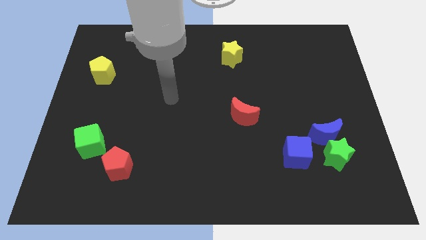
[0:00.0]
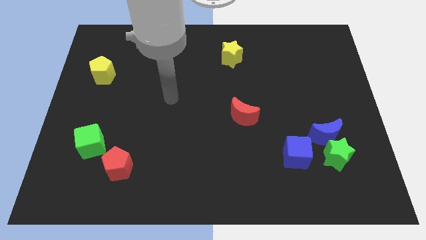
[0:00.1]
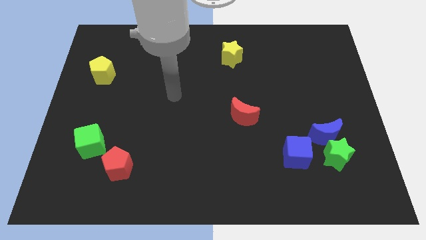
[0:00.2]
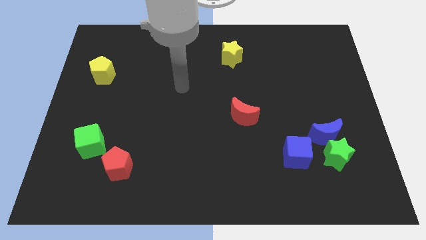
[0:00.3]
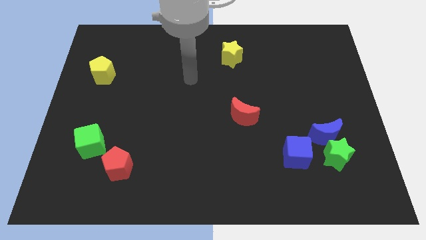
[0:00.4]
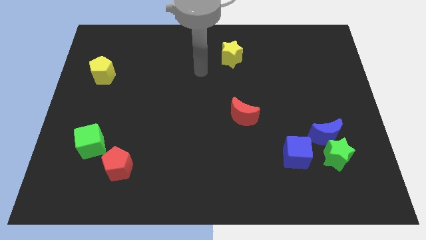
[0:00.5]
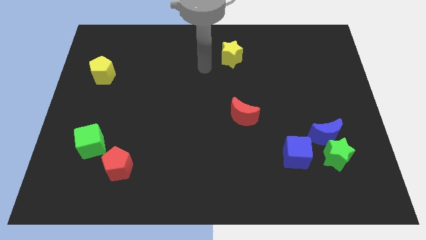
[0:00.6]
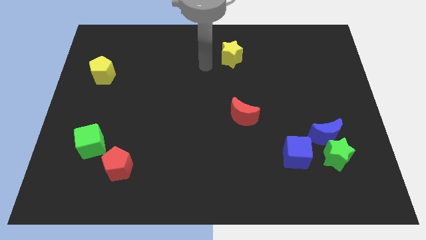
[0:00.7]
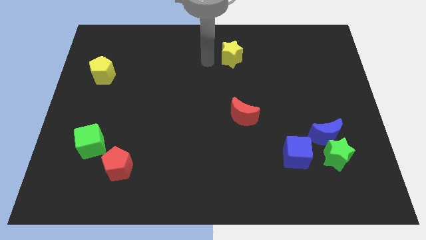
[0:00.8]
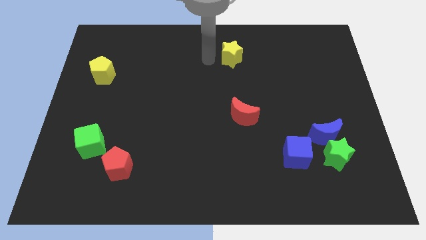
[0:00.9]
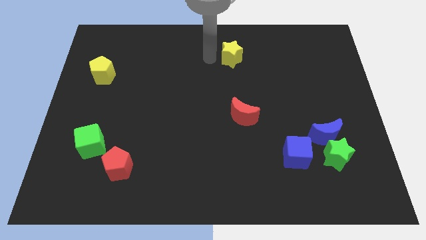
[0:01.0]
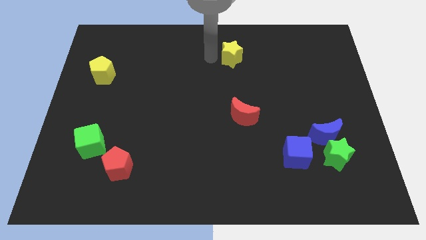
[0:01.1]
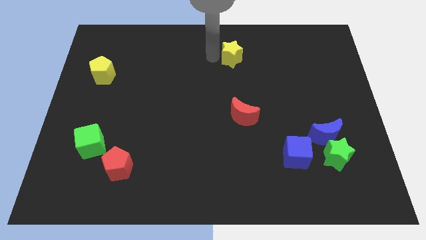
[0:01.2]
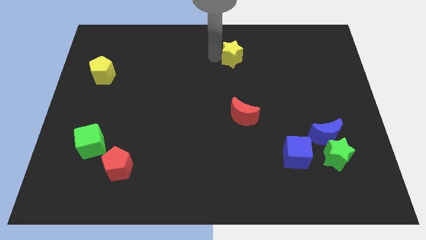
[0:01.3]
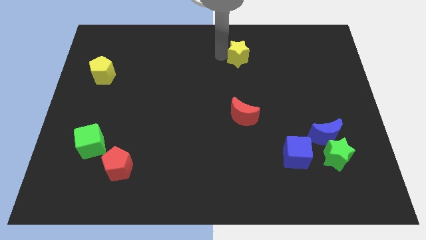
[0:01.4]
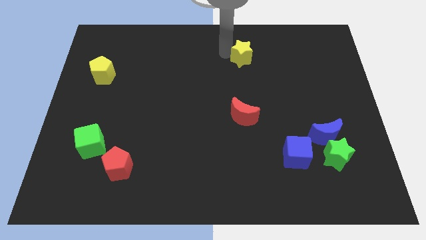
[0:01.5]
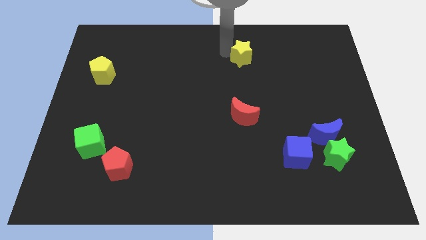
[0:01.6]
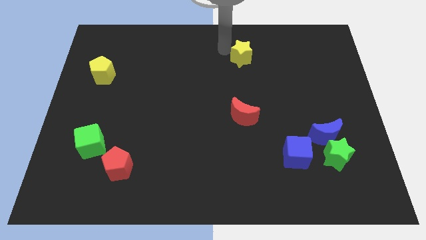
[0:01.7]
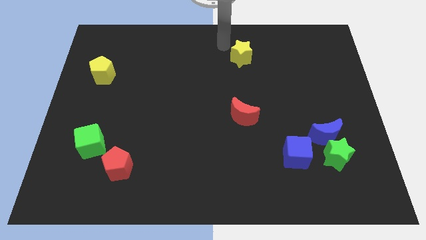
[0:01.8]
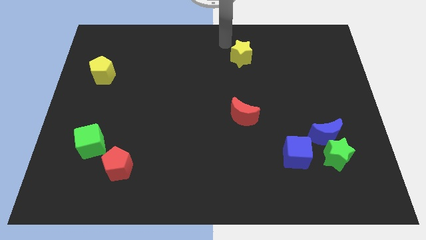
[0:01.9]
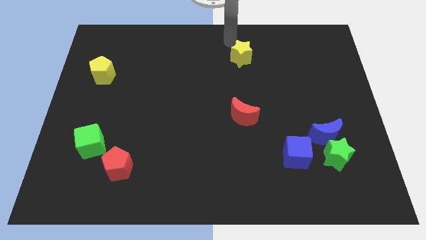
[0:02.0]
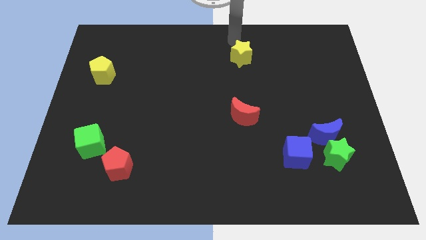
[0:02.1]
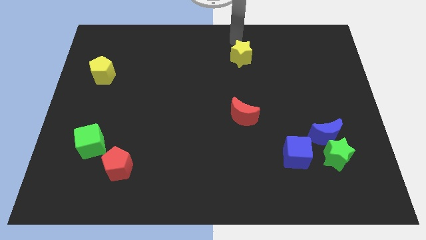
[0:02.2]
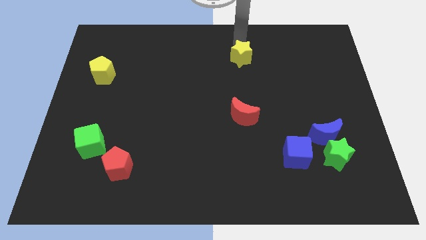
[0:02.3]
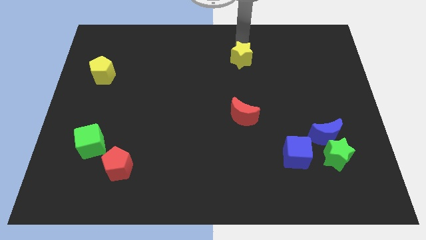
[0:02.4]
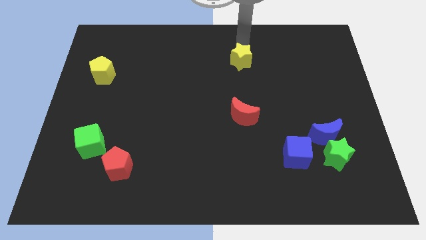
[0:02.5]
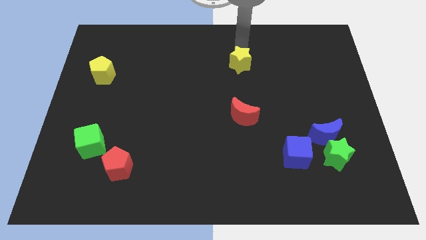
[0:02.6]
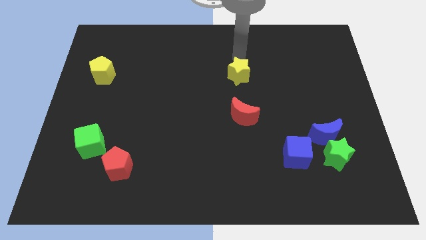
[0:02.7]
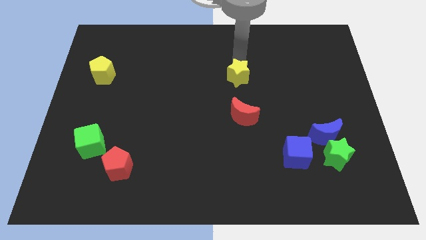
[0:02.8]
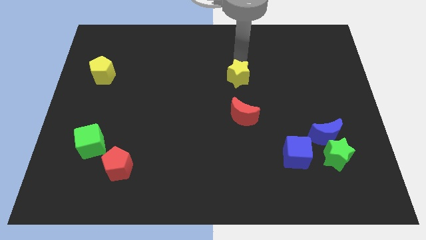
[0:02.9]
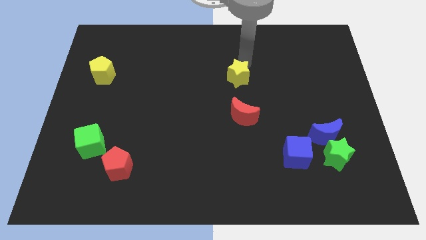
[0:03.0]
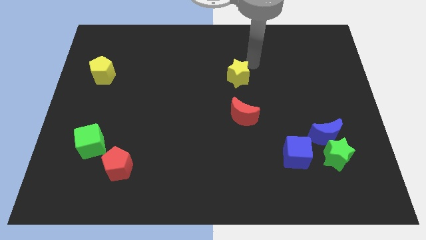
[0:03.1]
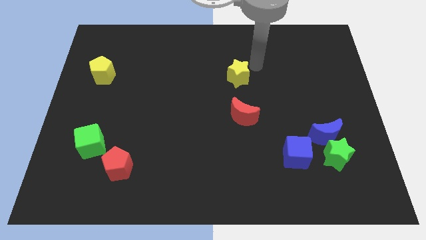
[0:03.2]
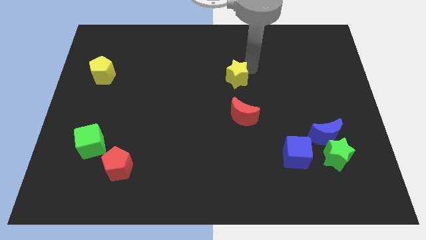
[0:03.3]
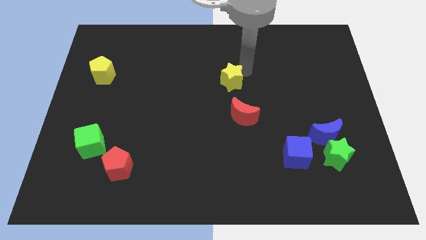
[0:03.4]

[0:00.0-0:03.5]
place the yellow star above the red crescent

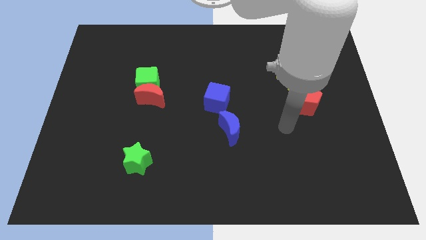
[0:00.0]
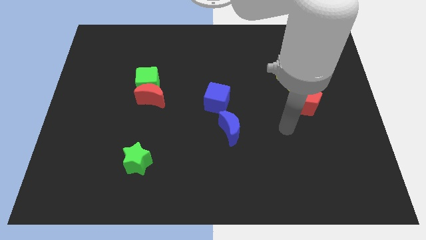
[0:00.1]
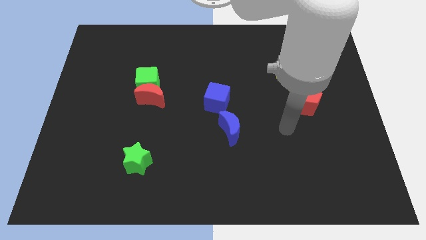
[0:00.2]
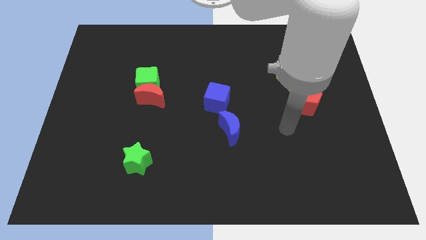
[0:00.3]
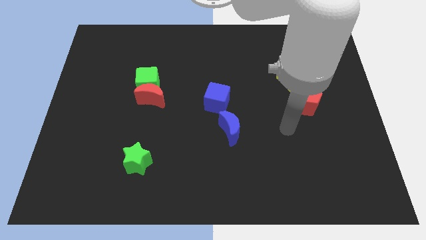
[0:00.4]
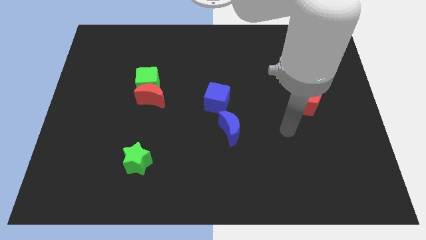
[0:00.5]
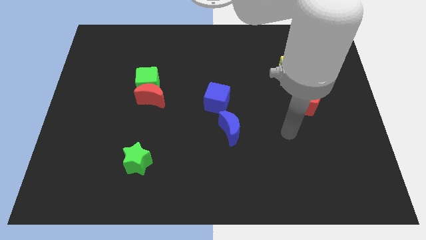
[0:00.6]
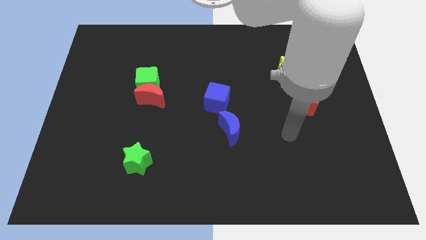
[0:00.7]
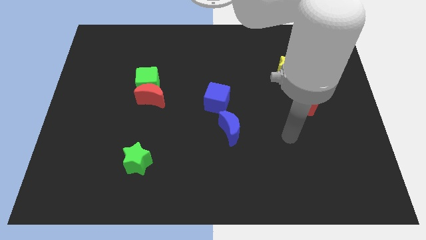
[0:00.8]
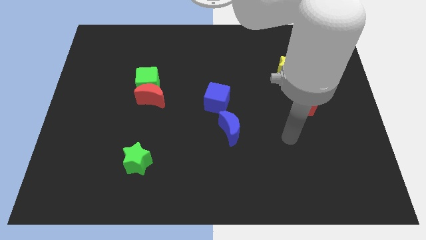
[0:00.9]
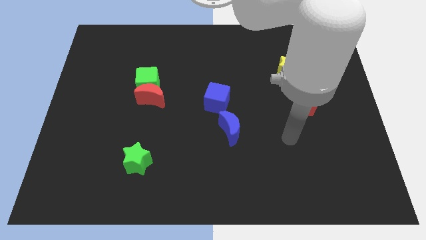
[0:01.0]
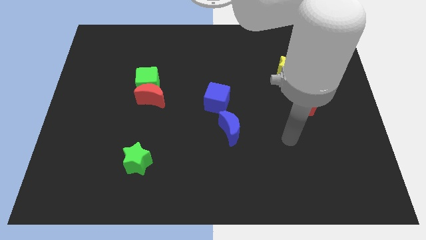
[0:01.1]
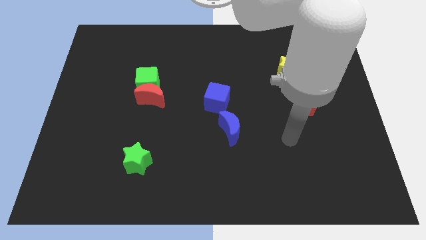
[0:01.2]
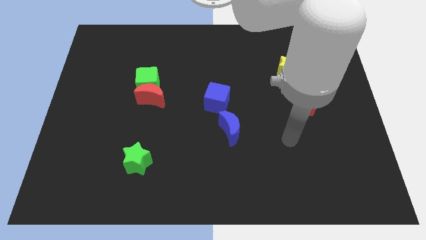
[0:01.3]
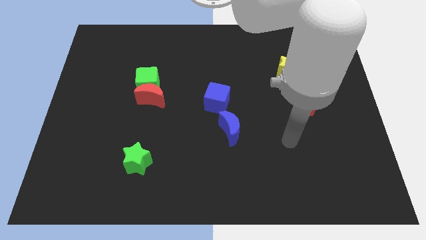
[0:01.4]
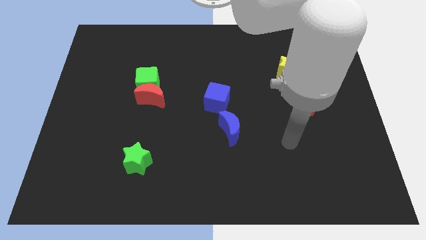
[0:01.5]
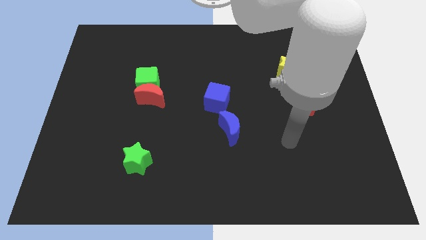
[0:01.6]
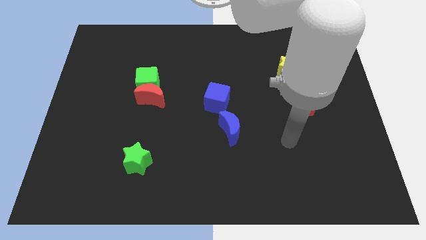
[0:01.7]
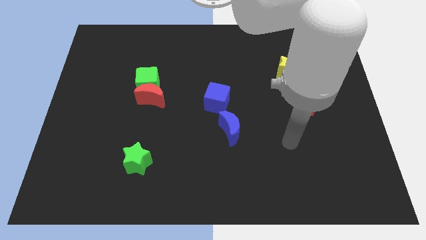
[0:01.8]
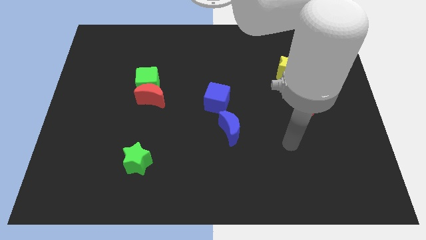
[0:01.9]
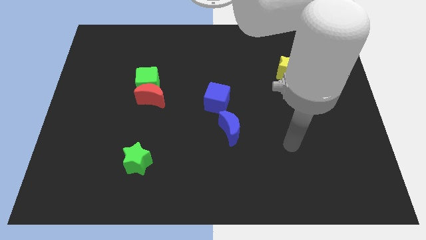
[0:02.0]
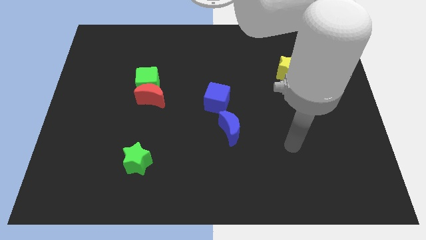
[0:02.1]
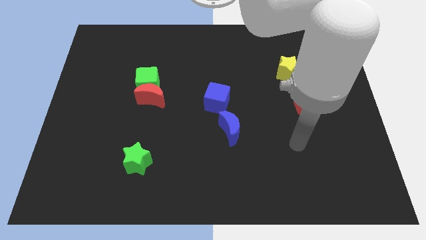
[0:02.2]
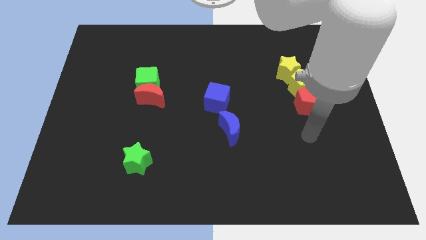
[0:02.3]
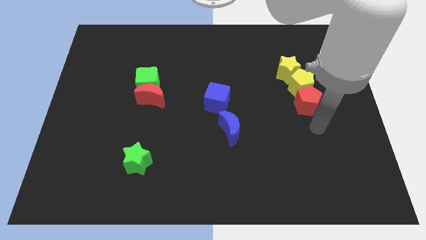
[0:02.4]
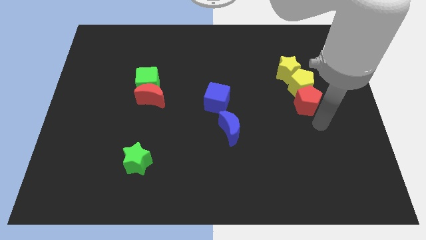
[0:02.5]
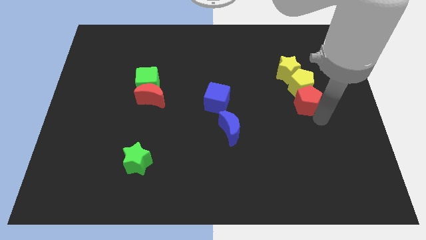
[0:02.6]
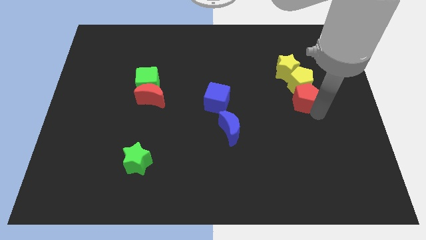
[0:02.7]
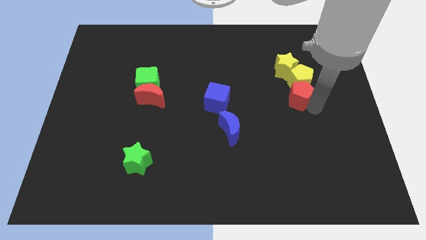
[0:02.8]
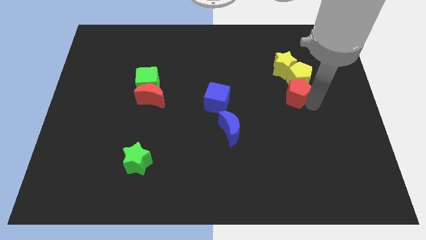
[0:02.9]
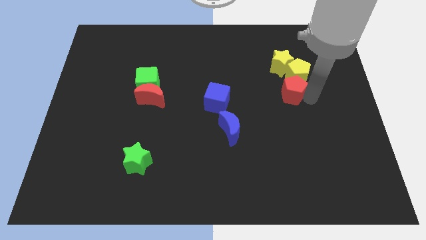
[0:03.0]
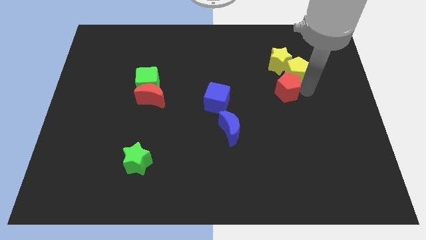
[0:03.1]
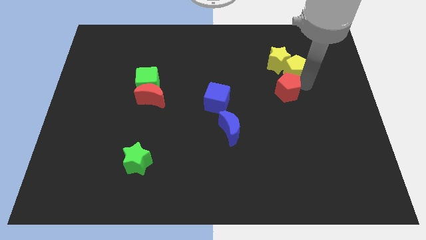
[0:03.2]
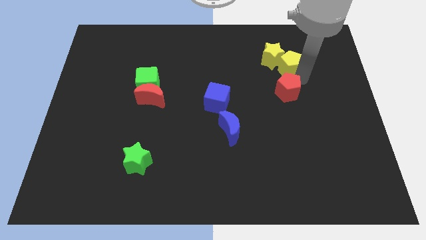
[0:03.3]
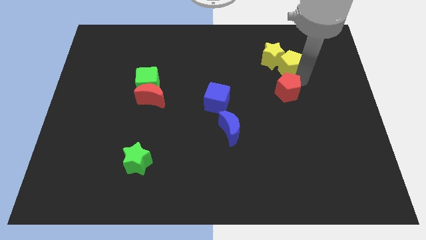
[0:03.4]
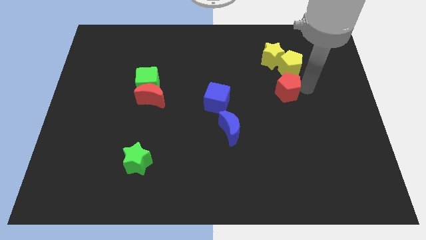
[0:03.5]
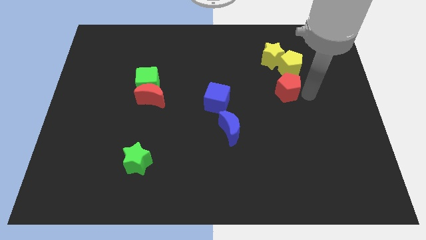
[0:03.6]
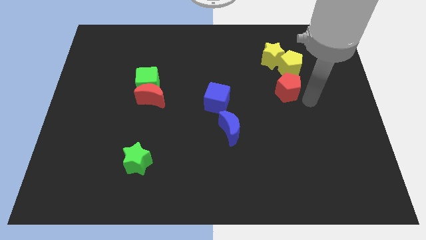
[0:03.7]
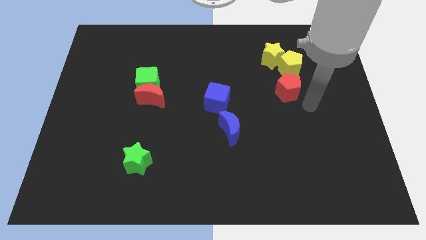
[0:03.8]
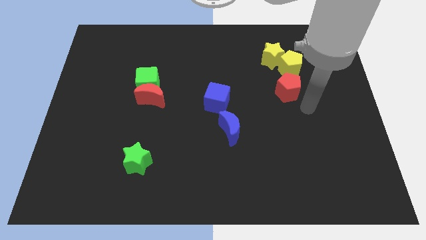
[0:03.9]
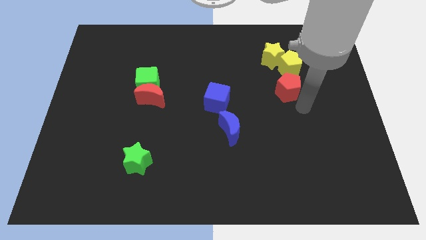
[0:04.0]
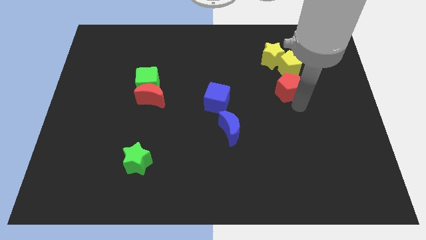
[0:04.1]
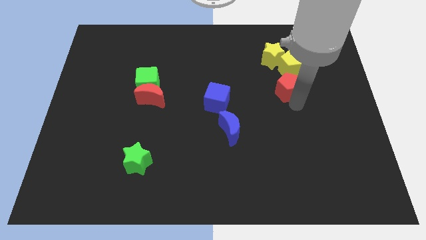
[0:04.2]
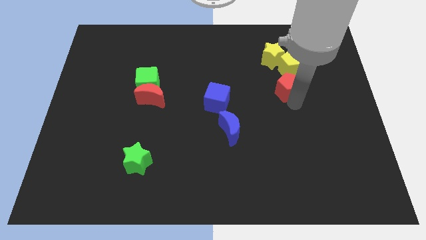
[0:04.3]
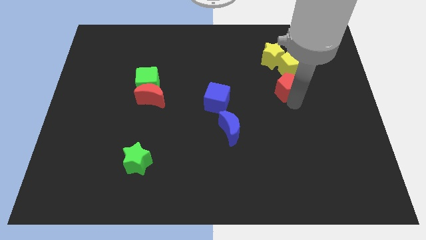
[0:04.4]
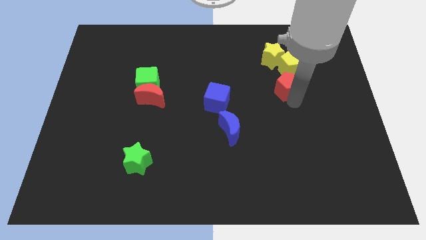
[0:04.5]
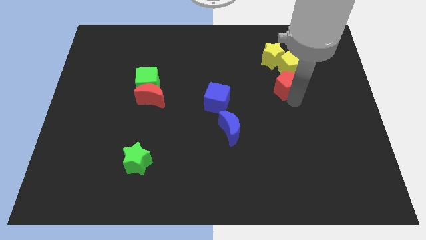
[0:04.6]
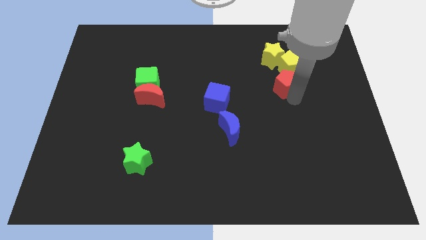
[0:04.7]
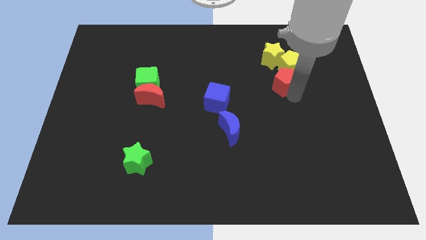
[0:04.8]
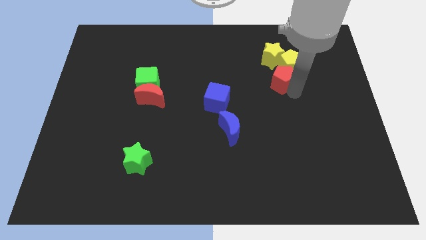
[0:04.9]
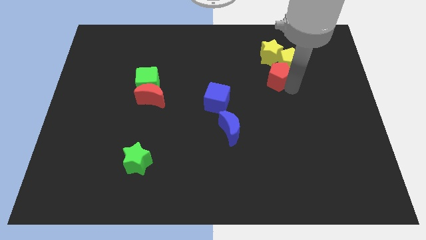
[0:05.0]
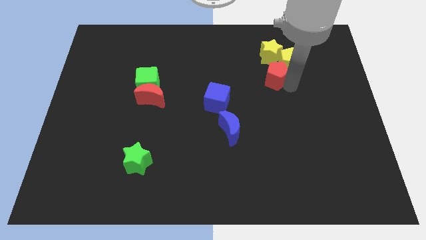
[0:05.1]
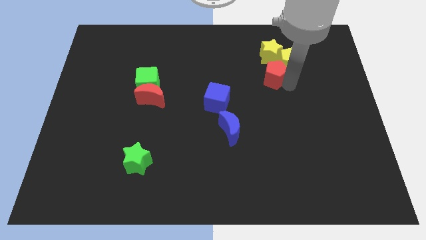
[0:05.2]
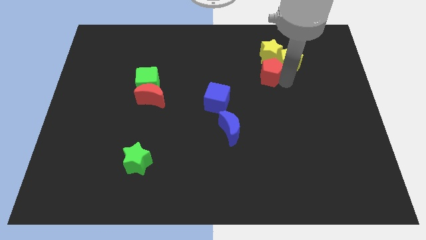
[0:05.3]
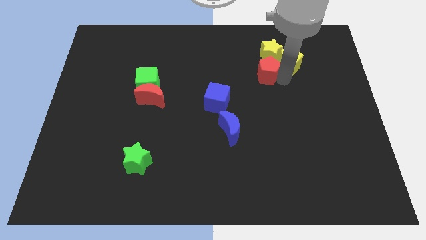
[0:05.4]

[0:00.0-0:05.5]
move the red pentagon down to the yellow star
